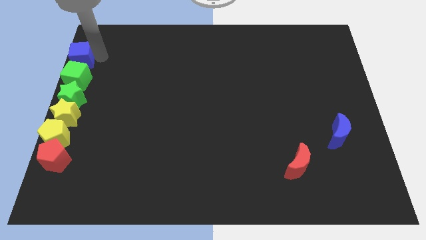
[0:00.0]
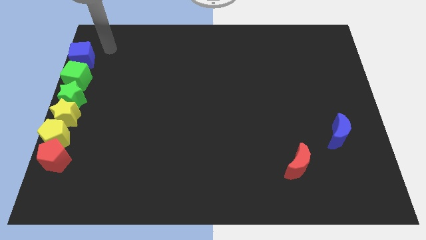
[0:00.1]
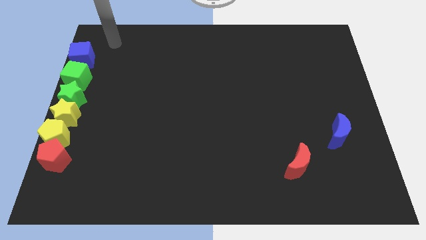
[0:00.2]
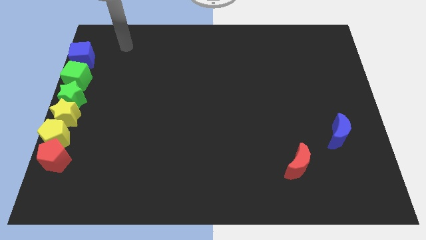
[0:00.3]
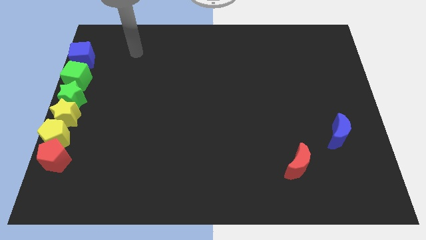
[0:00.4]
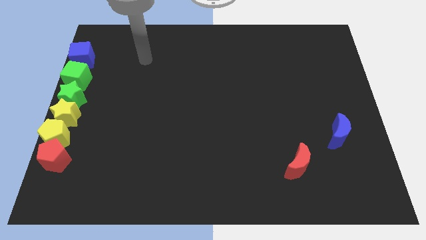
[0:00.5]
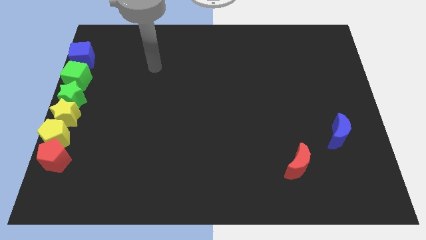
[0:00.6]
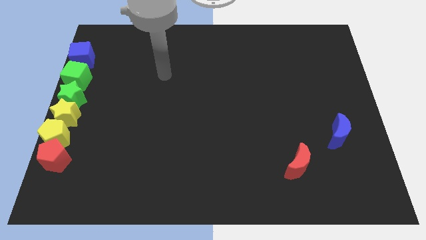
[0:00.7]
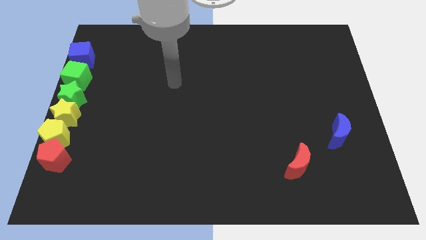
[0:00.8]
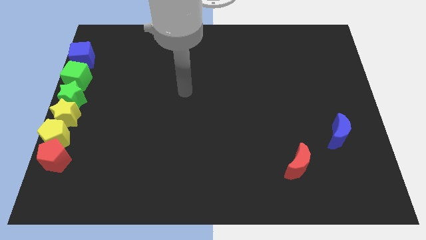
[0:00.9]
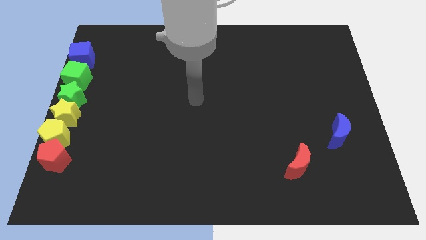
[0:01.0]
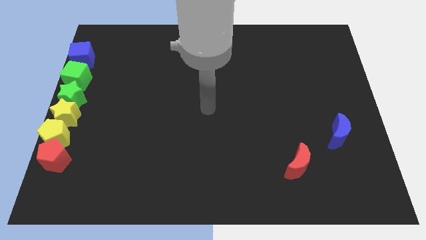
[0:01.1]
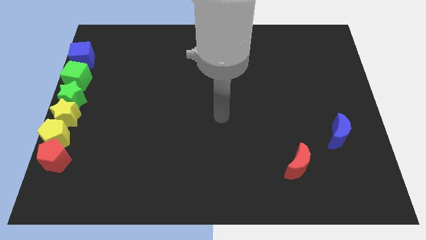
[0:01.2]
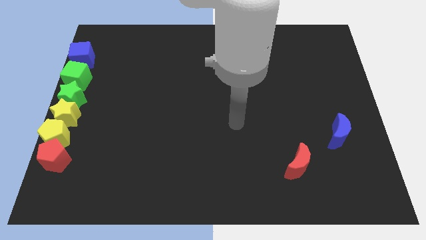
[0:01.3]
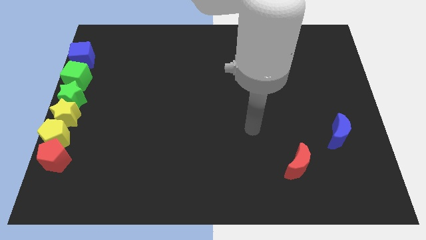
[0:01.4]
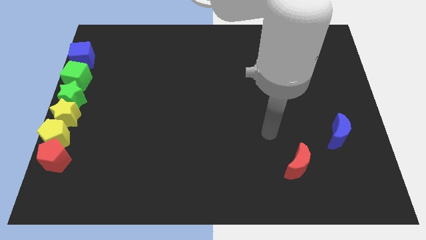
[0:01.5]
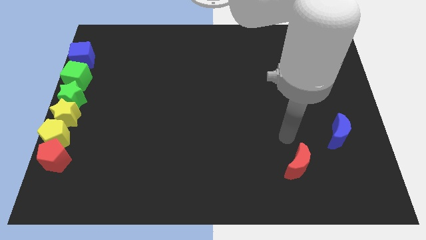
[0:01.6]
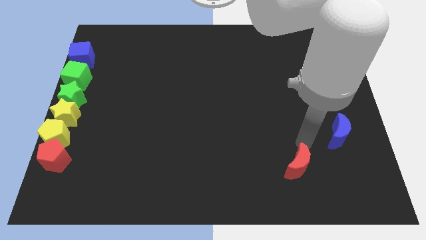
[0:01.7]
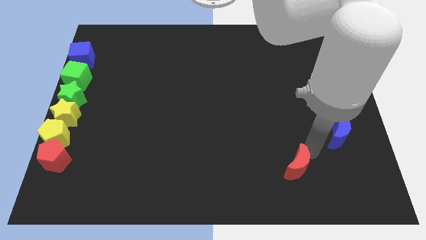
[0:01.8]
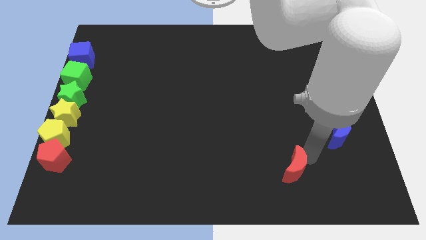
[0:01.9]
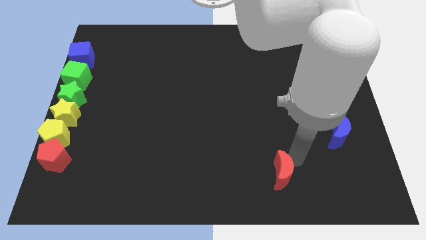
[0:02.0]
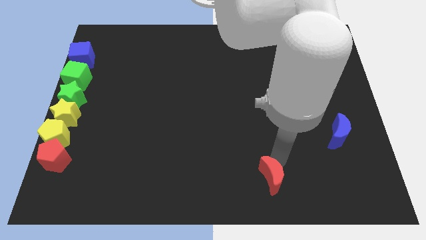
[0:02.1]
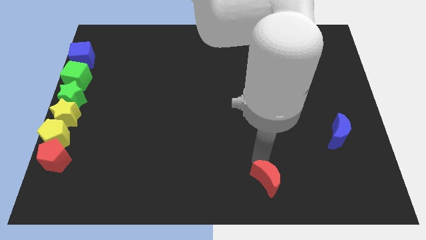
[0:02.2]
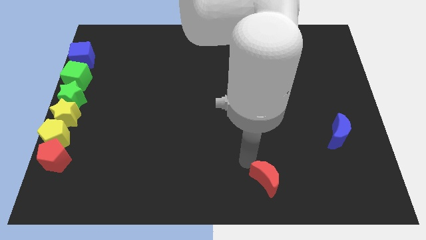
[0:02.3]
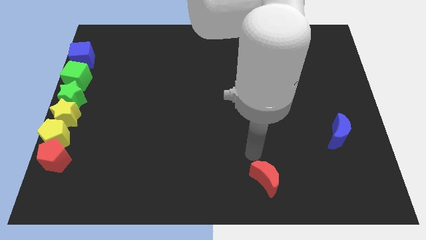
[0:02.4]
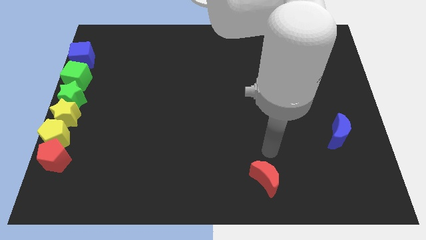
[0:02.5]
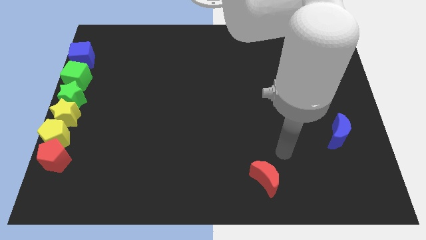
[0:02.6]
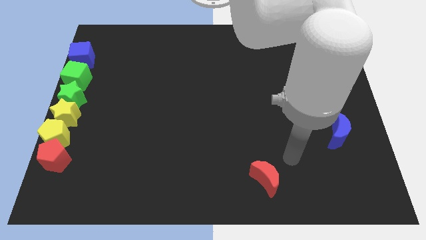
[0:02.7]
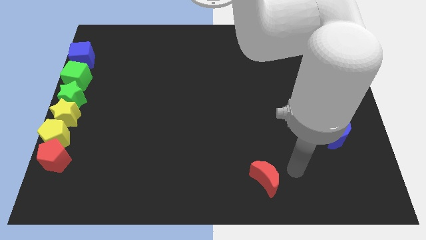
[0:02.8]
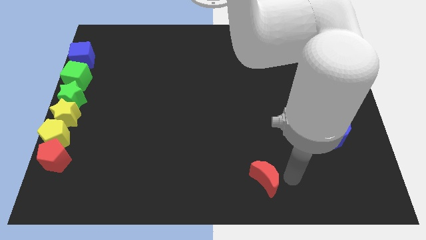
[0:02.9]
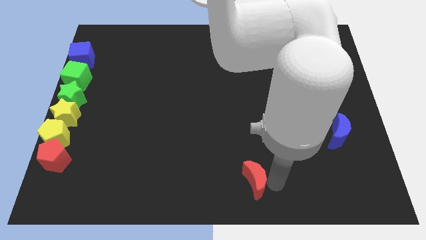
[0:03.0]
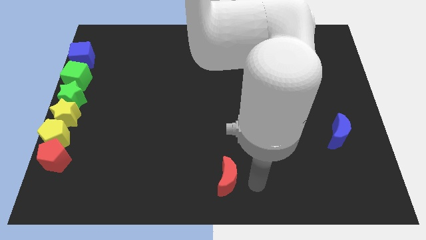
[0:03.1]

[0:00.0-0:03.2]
move red crescent to the bottom centre of the board

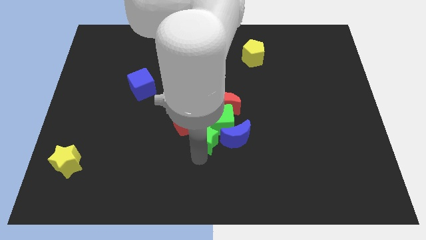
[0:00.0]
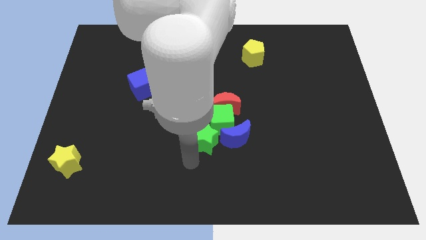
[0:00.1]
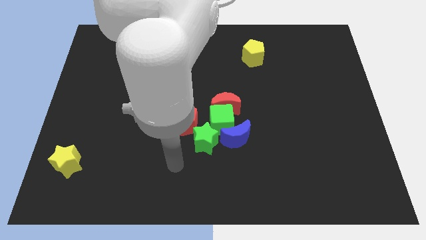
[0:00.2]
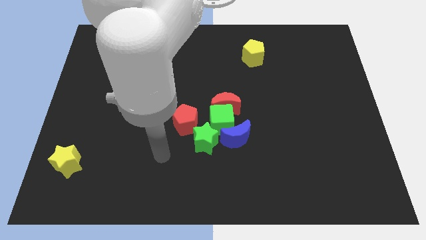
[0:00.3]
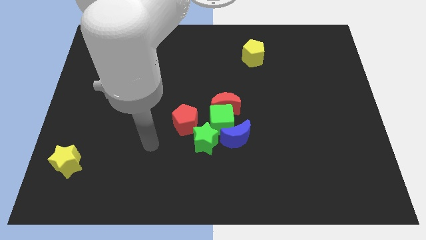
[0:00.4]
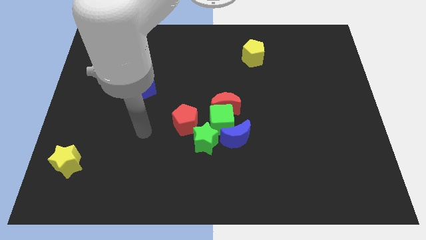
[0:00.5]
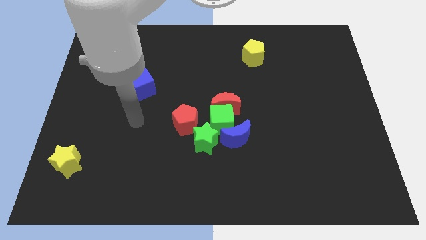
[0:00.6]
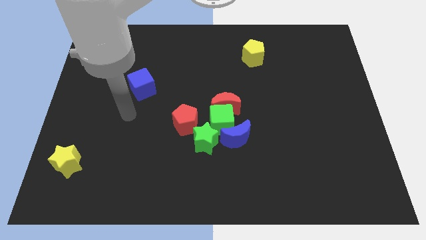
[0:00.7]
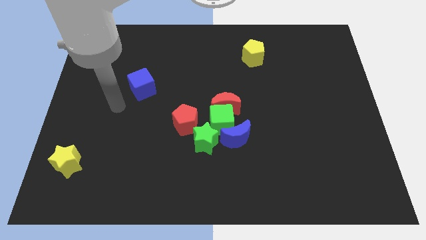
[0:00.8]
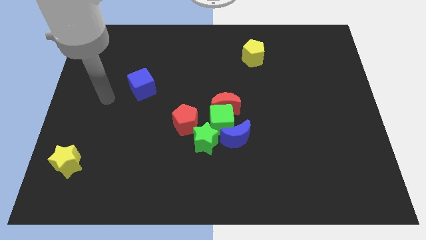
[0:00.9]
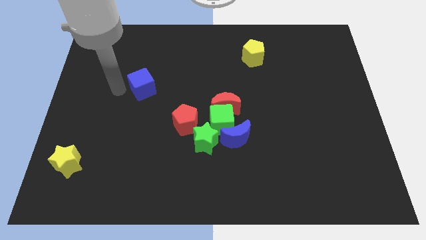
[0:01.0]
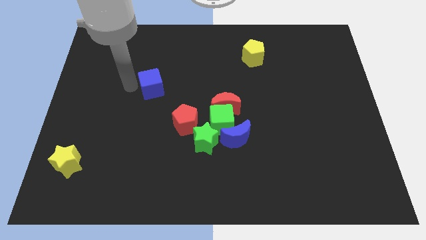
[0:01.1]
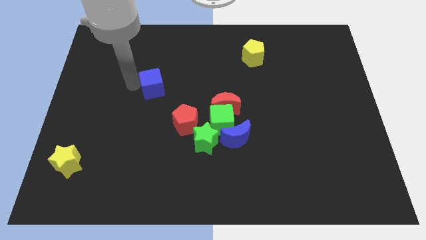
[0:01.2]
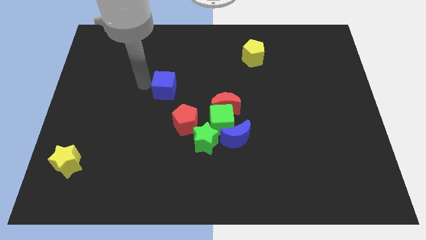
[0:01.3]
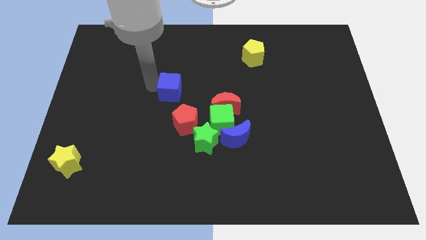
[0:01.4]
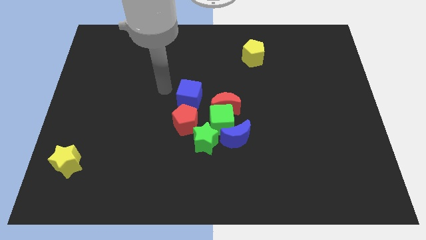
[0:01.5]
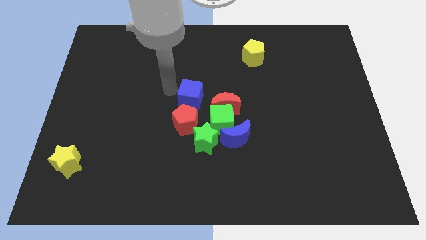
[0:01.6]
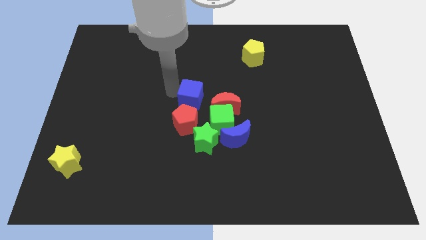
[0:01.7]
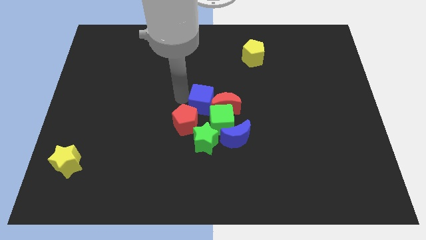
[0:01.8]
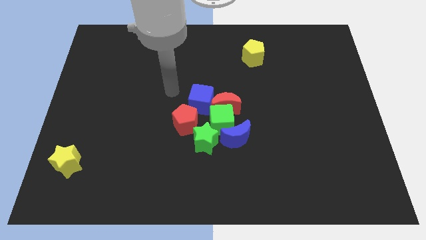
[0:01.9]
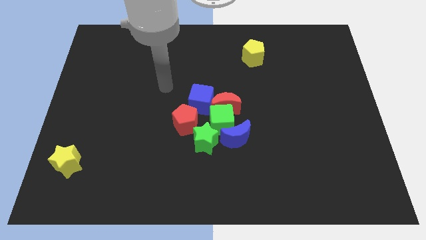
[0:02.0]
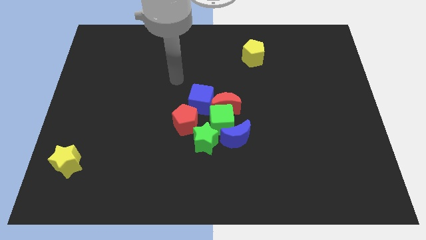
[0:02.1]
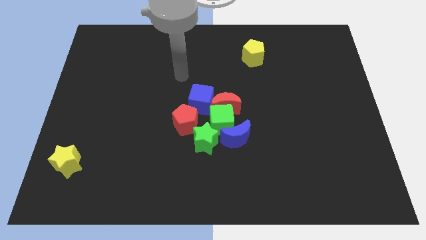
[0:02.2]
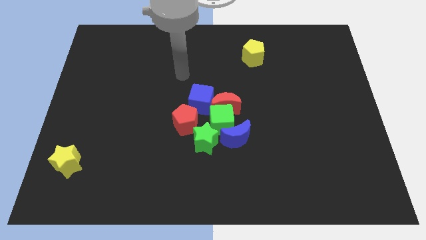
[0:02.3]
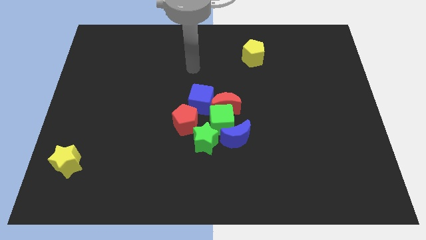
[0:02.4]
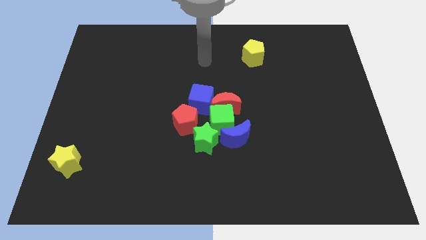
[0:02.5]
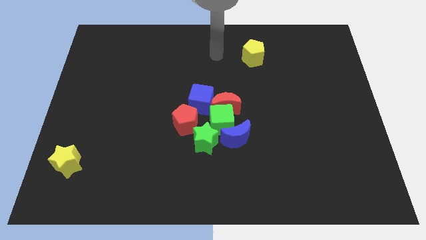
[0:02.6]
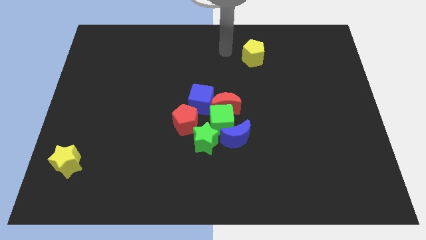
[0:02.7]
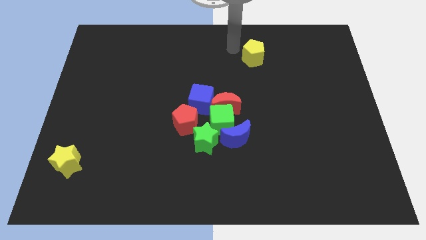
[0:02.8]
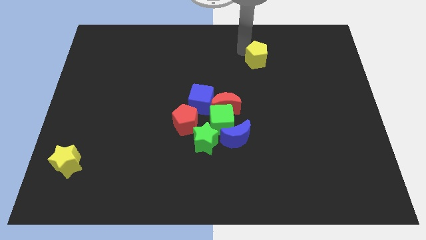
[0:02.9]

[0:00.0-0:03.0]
move the blue cube to the center of the board

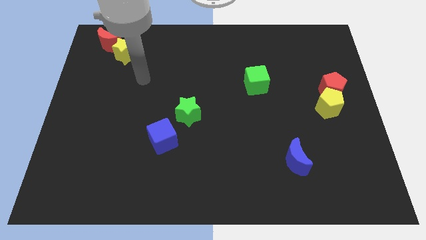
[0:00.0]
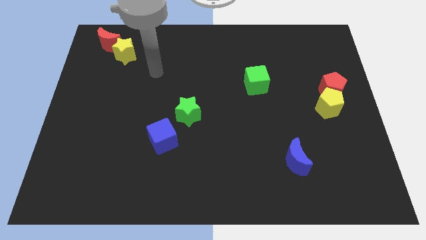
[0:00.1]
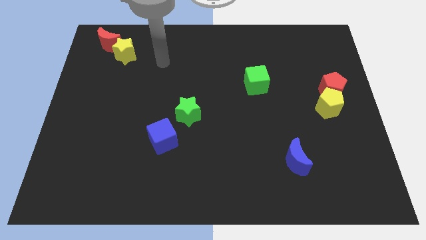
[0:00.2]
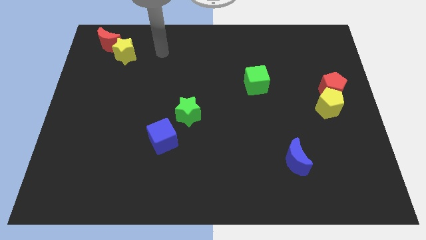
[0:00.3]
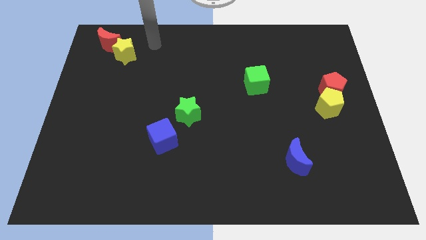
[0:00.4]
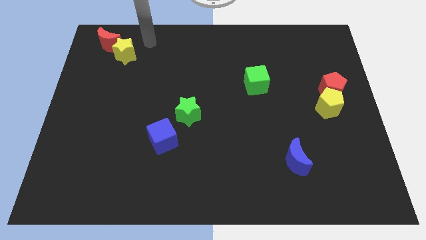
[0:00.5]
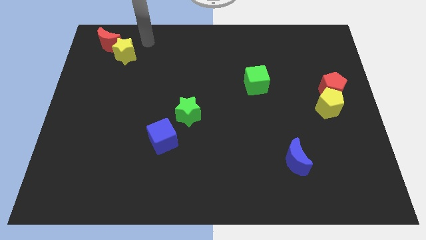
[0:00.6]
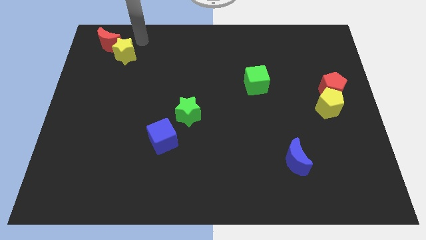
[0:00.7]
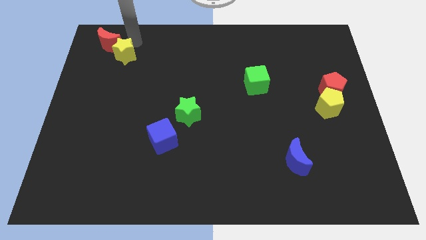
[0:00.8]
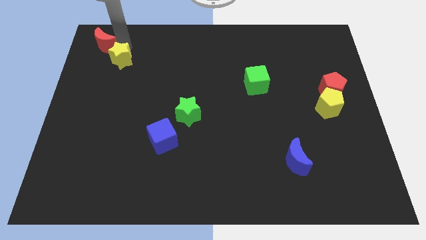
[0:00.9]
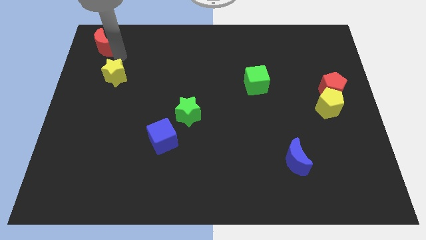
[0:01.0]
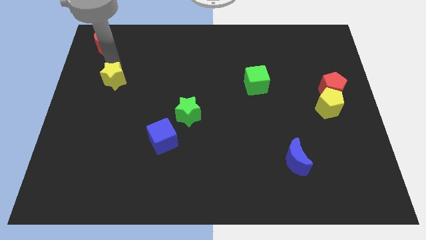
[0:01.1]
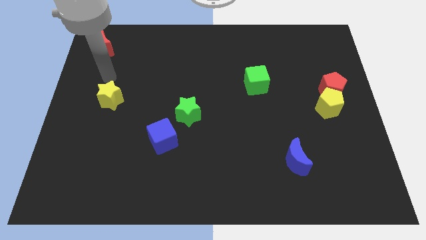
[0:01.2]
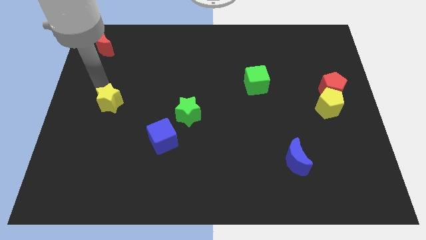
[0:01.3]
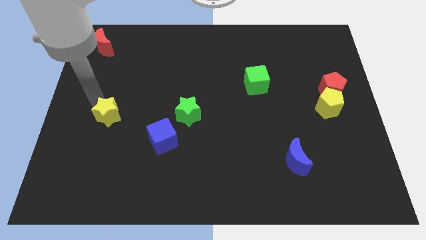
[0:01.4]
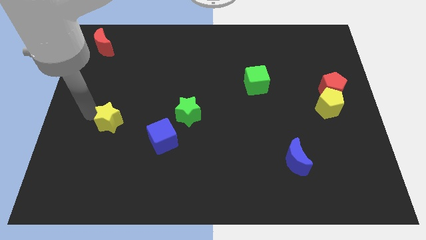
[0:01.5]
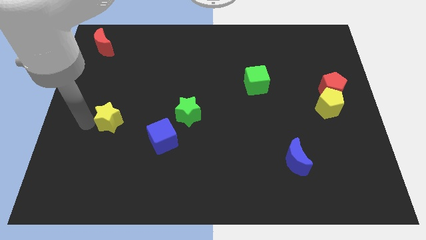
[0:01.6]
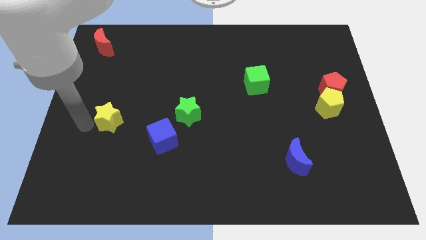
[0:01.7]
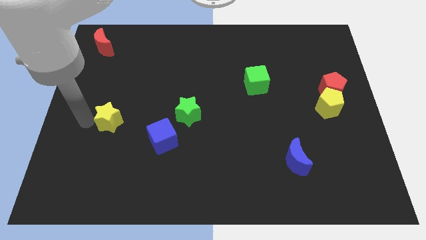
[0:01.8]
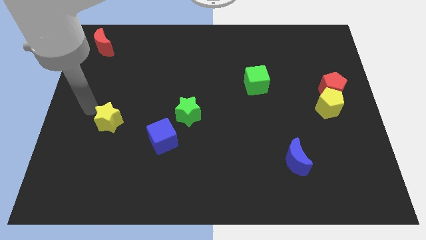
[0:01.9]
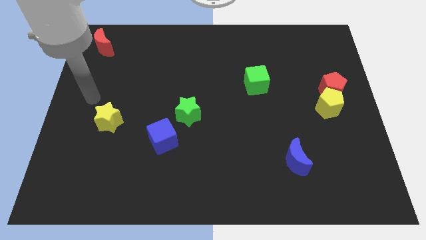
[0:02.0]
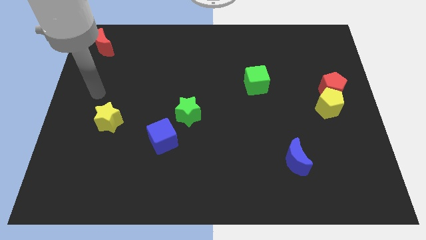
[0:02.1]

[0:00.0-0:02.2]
separate the yellow star from red moon

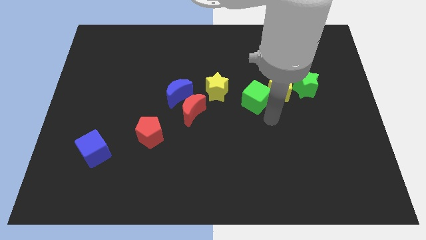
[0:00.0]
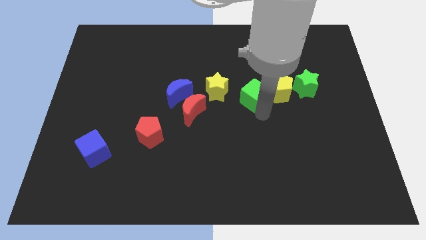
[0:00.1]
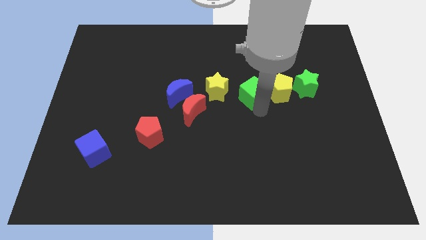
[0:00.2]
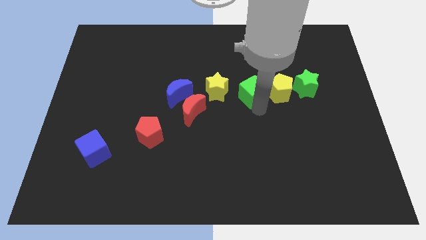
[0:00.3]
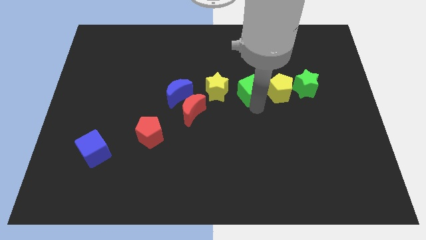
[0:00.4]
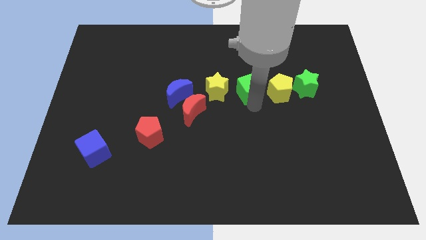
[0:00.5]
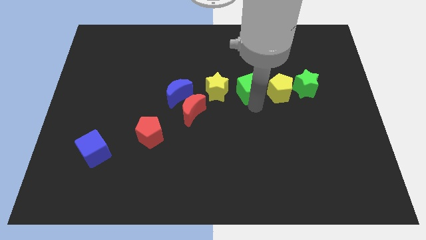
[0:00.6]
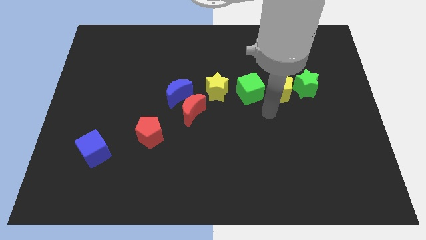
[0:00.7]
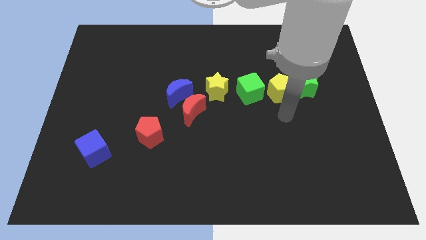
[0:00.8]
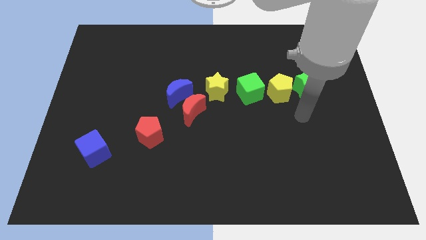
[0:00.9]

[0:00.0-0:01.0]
place the green cube left to yellow pentagon
